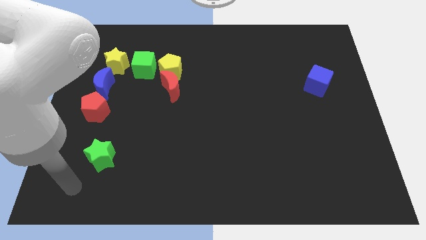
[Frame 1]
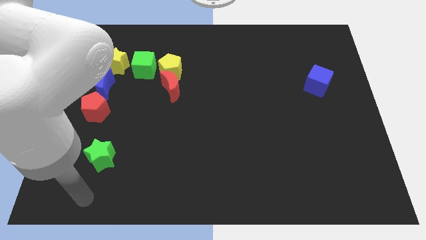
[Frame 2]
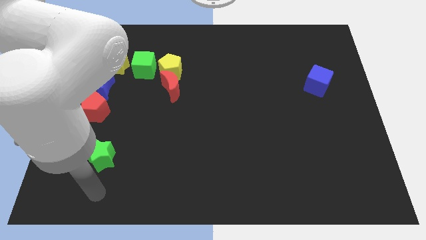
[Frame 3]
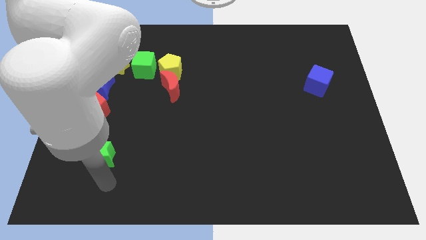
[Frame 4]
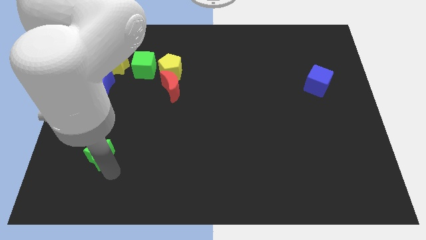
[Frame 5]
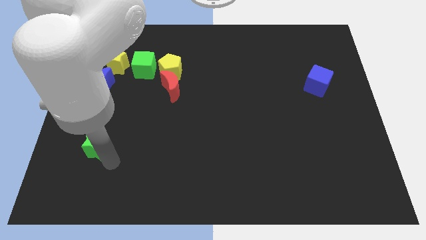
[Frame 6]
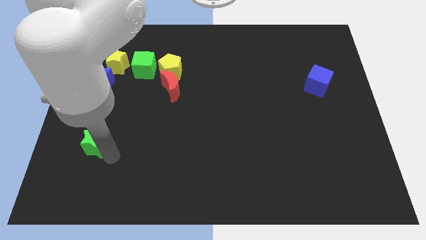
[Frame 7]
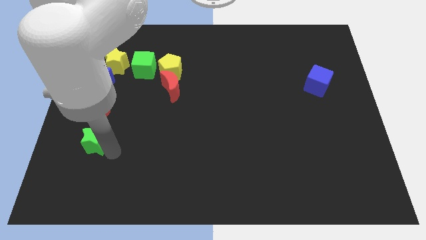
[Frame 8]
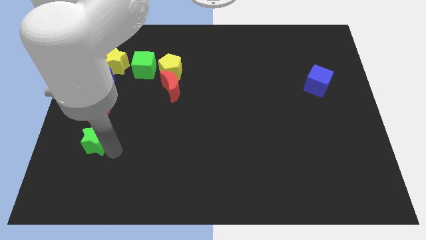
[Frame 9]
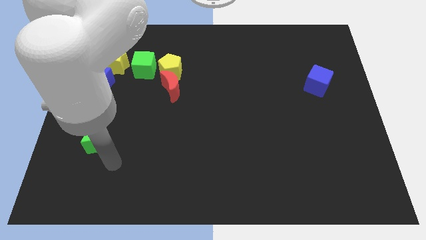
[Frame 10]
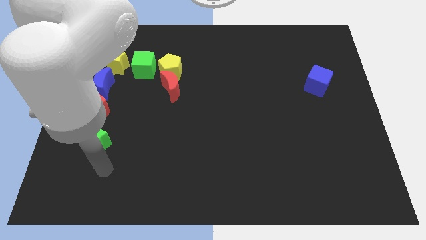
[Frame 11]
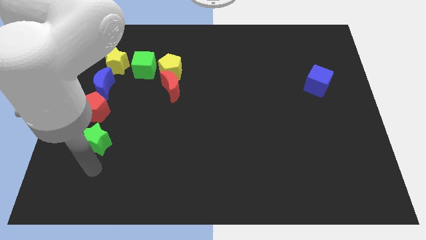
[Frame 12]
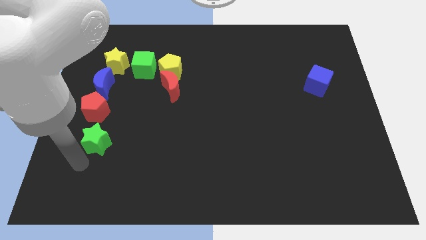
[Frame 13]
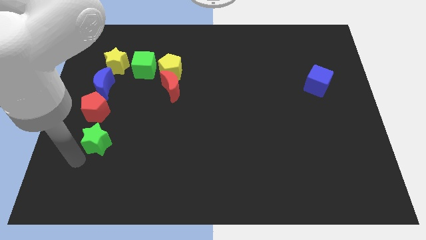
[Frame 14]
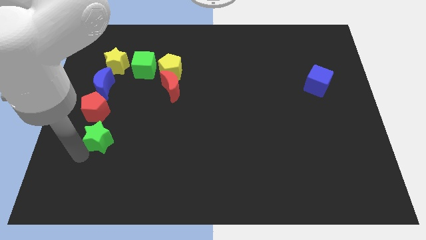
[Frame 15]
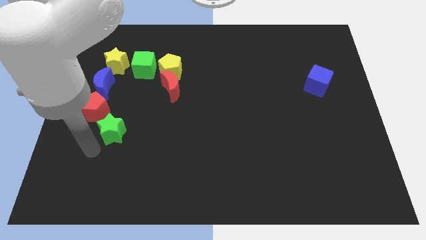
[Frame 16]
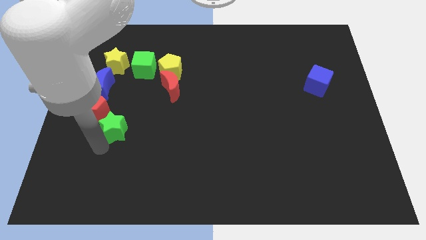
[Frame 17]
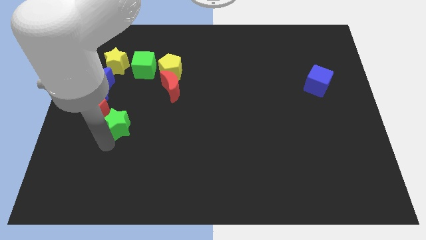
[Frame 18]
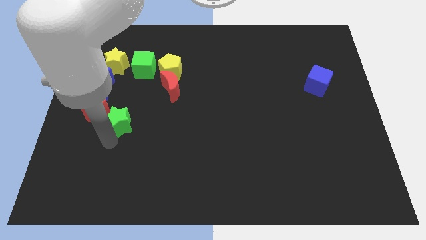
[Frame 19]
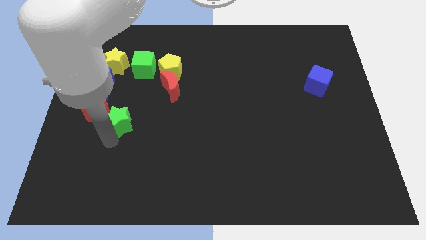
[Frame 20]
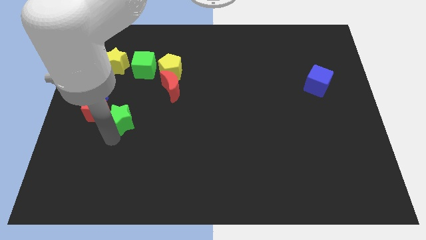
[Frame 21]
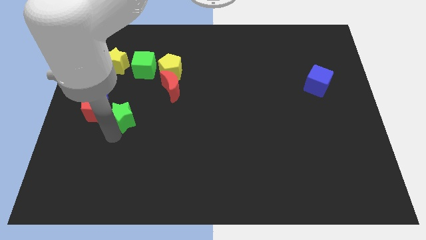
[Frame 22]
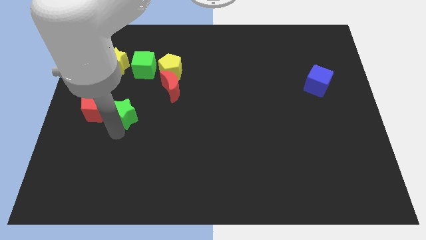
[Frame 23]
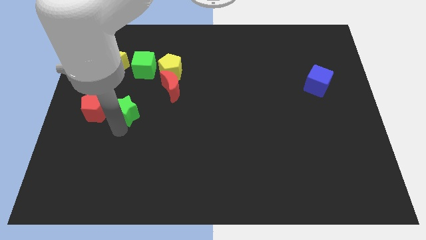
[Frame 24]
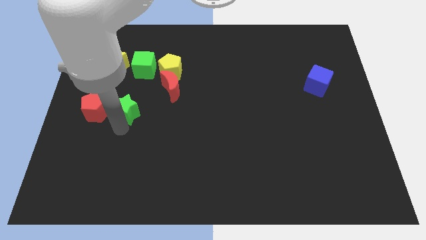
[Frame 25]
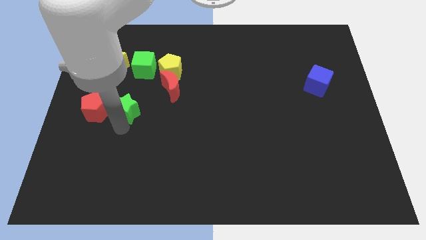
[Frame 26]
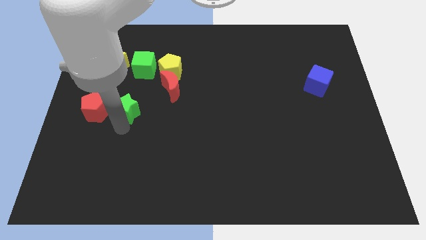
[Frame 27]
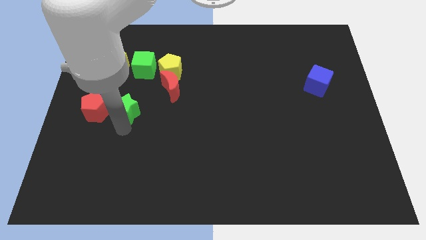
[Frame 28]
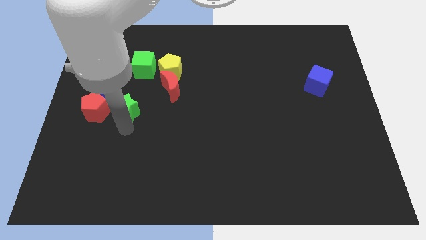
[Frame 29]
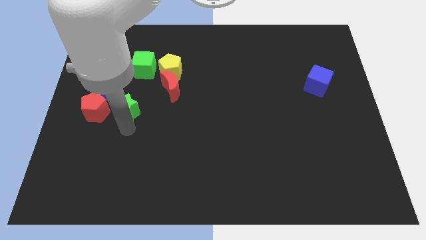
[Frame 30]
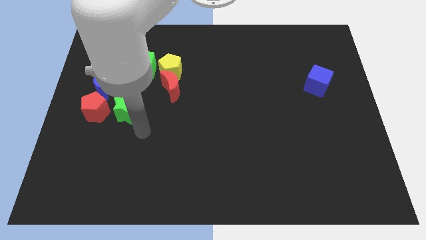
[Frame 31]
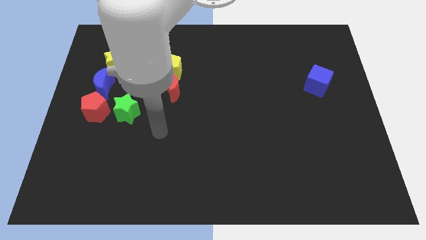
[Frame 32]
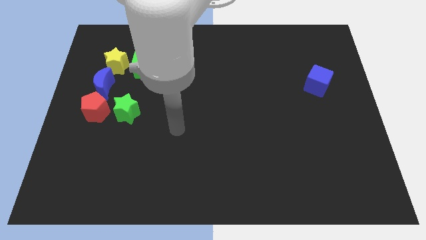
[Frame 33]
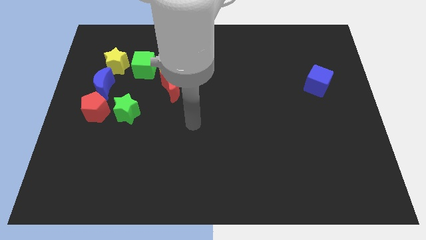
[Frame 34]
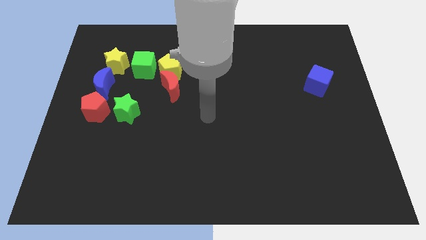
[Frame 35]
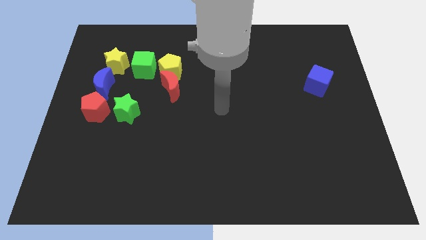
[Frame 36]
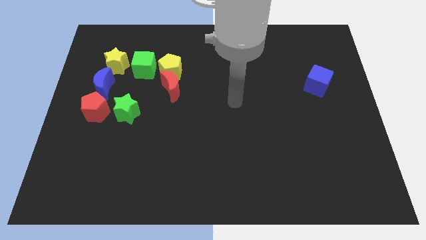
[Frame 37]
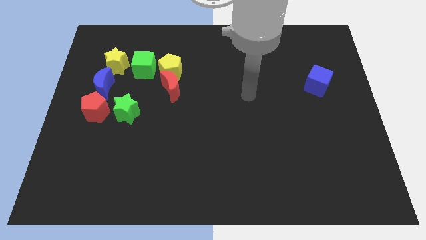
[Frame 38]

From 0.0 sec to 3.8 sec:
place green star close to the red pentagon

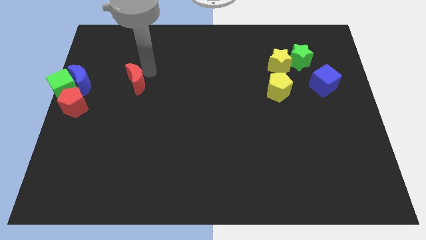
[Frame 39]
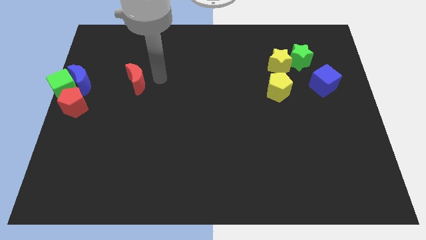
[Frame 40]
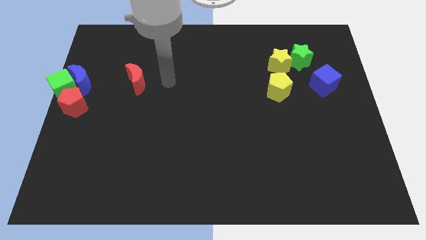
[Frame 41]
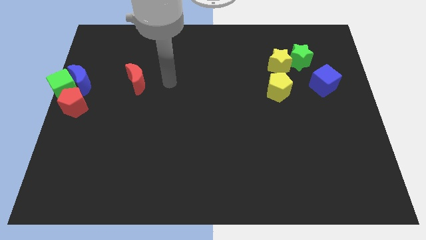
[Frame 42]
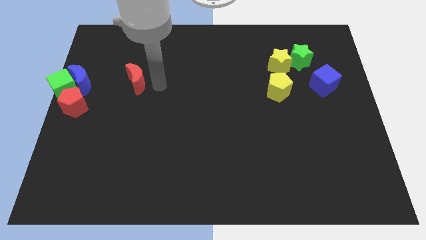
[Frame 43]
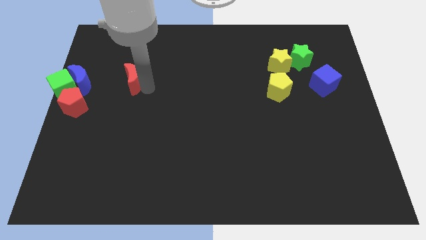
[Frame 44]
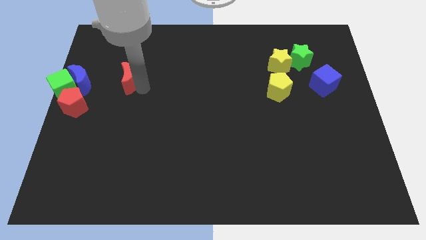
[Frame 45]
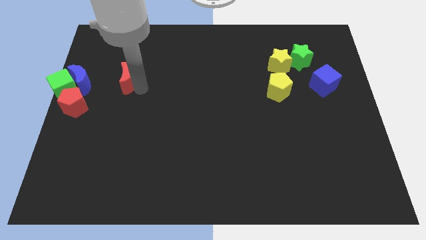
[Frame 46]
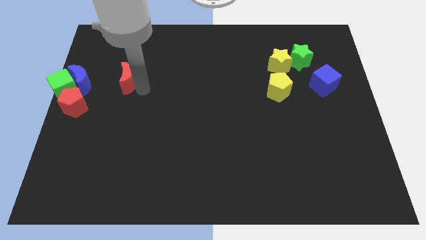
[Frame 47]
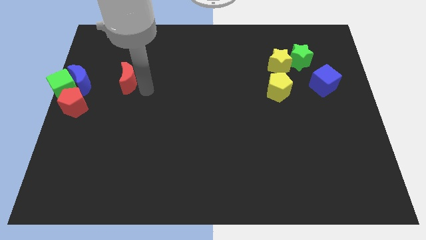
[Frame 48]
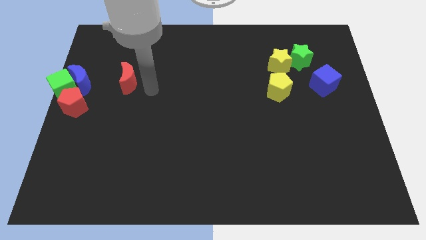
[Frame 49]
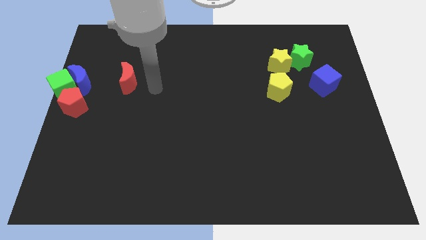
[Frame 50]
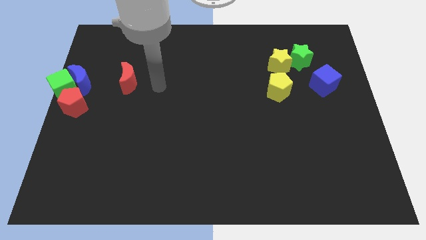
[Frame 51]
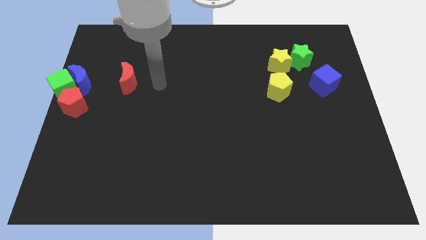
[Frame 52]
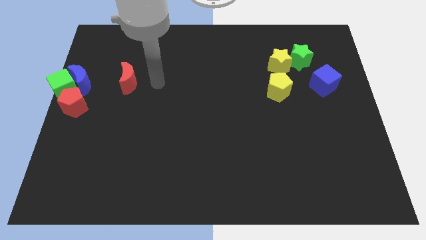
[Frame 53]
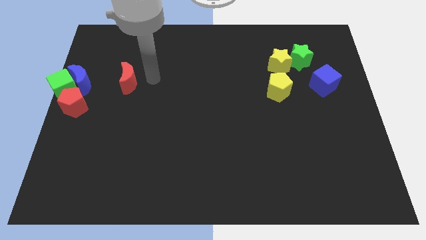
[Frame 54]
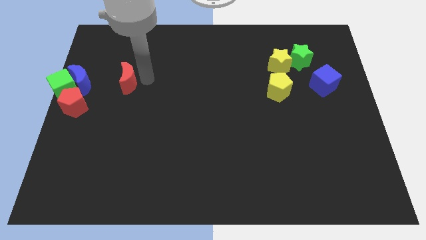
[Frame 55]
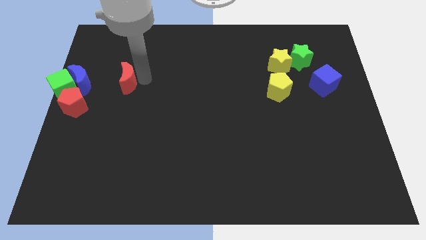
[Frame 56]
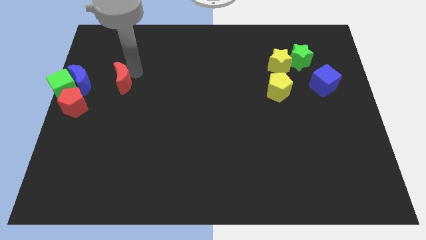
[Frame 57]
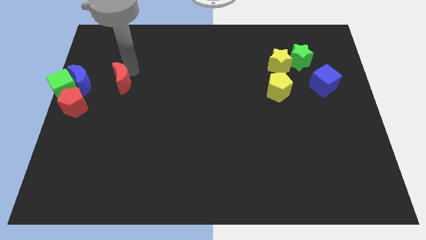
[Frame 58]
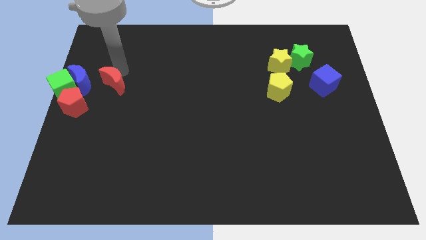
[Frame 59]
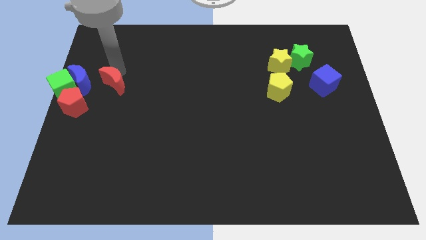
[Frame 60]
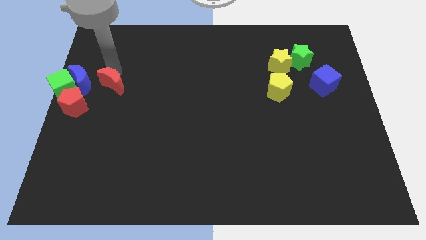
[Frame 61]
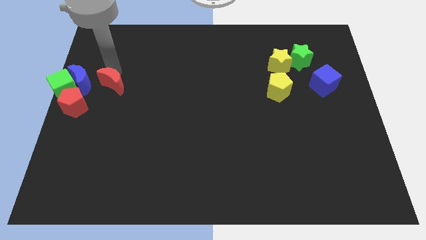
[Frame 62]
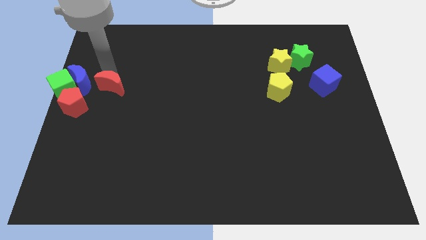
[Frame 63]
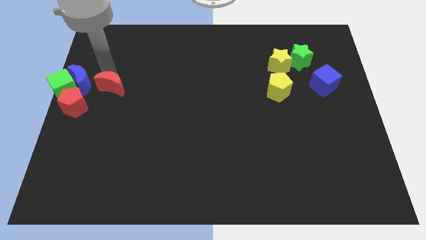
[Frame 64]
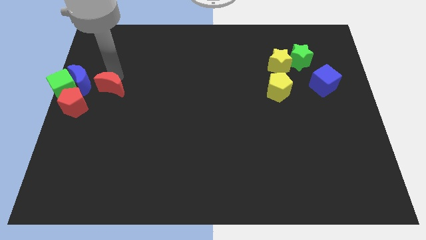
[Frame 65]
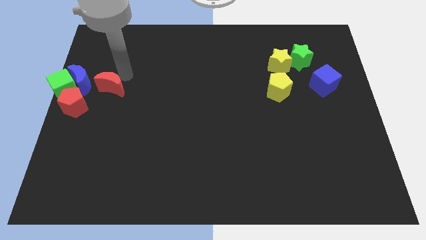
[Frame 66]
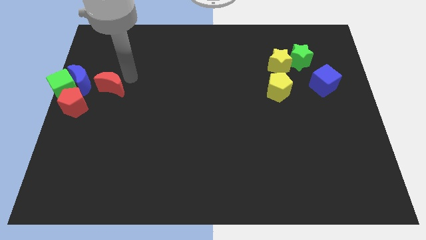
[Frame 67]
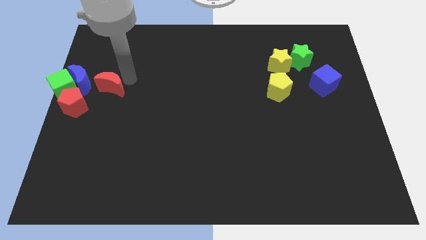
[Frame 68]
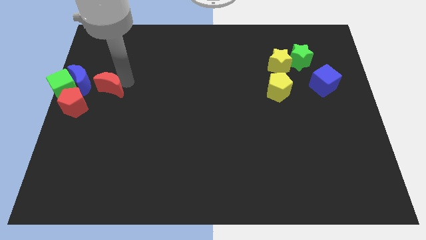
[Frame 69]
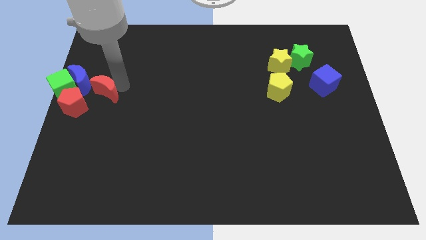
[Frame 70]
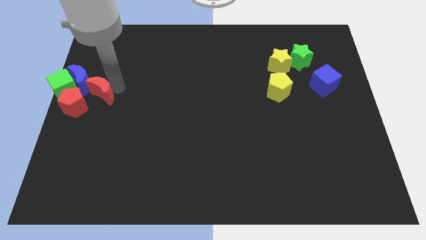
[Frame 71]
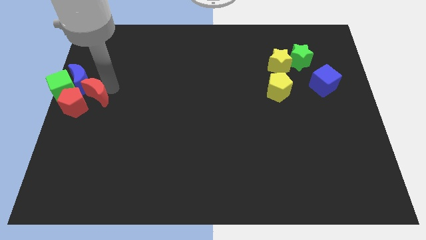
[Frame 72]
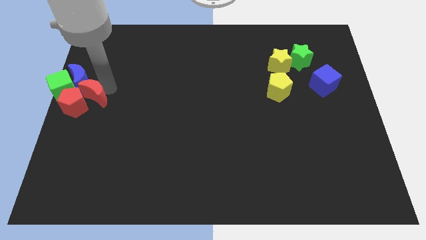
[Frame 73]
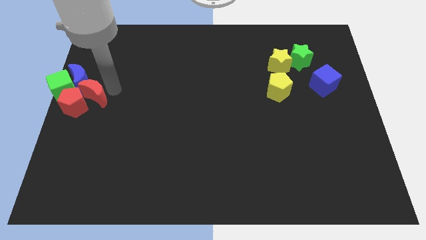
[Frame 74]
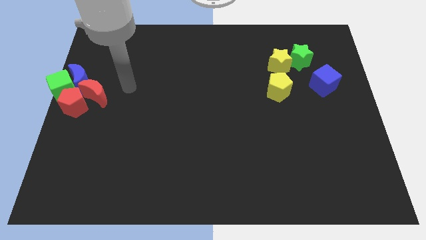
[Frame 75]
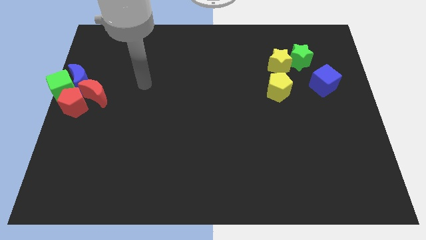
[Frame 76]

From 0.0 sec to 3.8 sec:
move the red moon below the blue moon

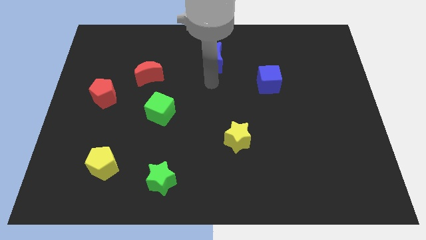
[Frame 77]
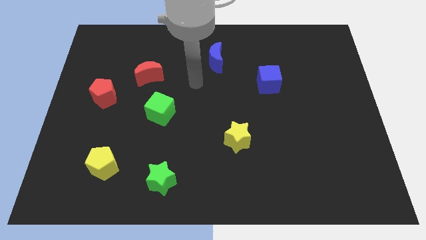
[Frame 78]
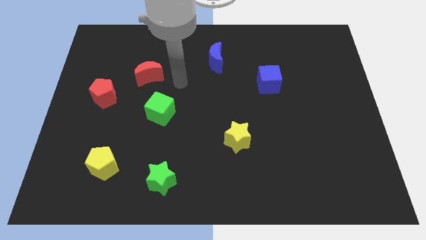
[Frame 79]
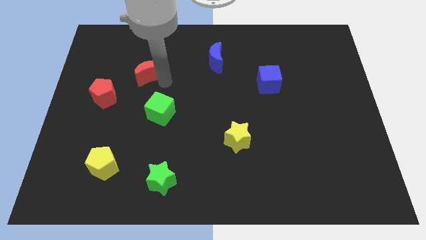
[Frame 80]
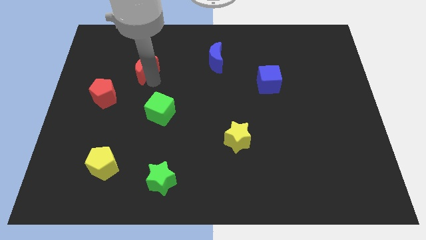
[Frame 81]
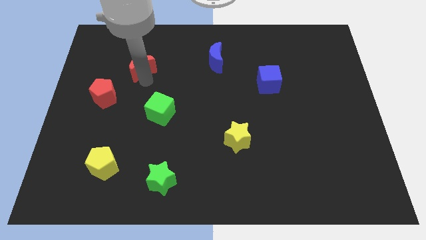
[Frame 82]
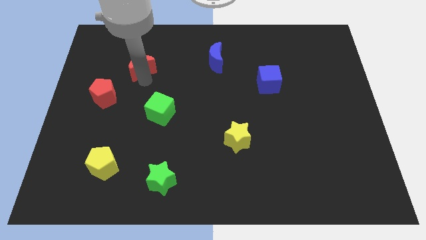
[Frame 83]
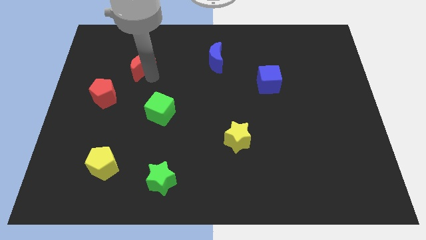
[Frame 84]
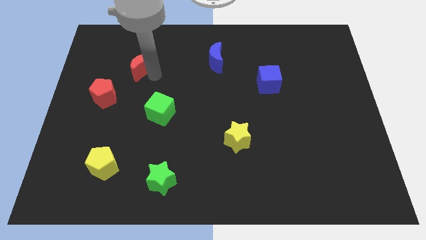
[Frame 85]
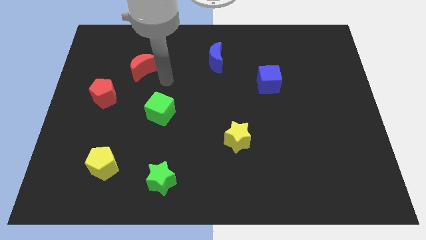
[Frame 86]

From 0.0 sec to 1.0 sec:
move your arm towards the red crescent

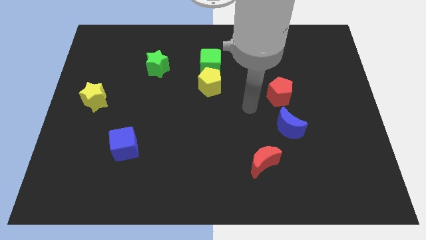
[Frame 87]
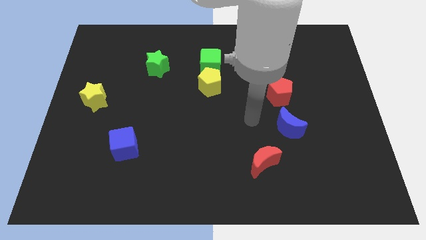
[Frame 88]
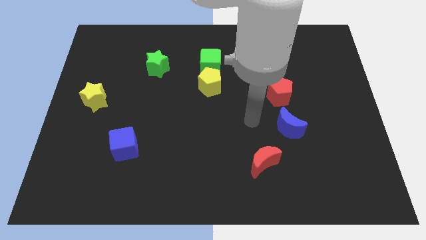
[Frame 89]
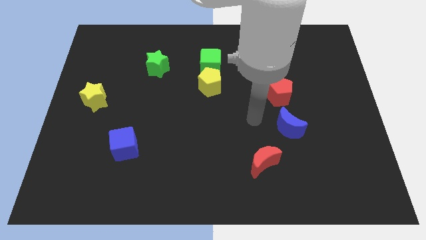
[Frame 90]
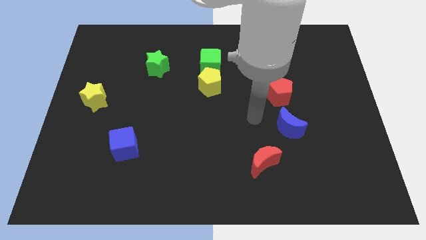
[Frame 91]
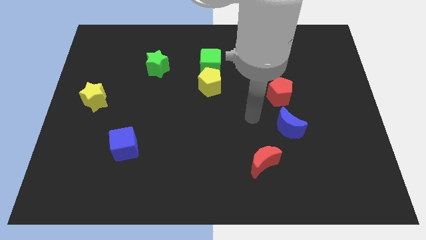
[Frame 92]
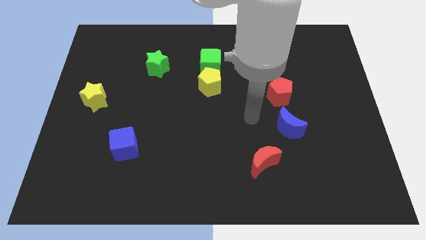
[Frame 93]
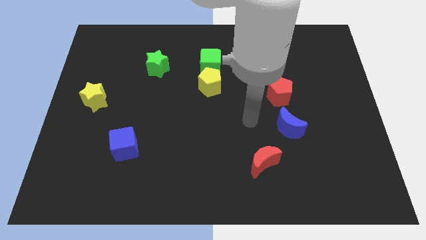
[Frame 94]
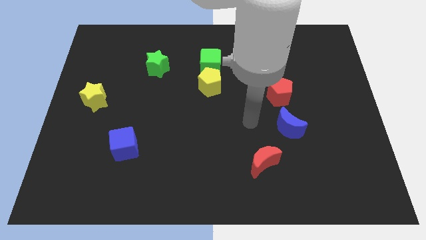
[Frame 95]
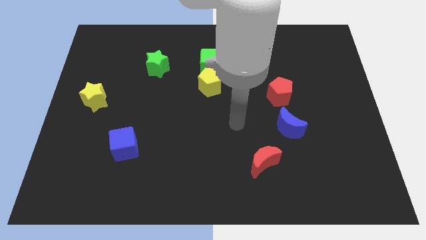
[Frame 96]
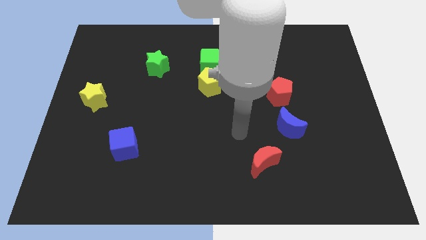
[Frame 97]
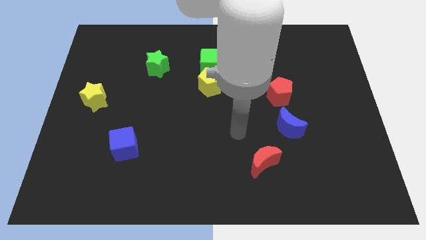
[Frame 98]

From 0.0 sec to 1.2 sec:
move your arm towards the red moon
